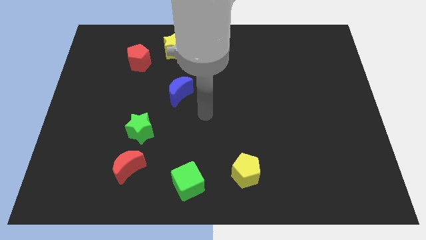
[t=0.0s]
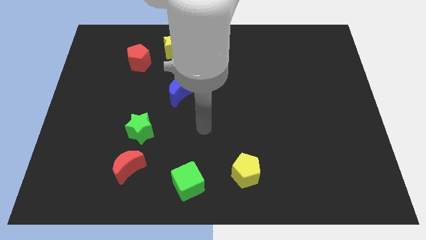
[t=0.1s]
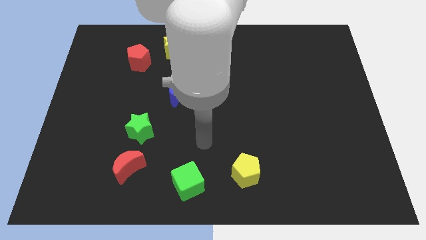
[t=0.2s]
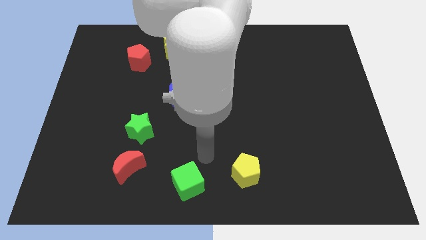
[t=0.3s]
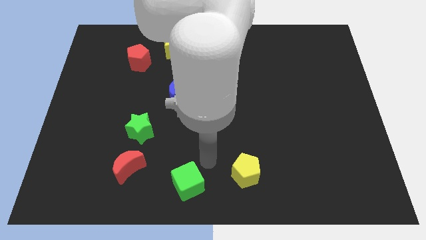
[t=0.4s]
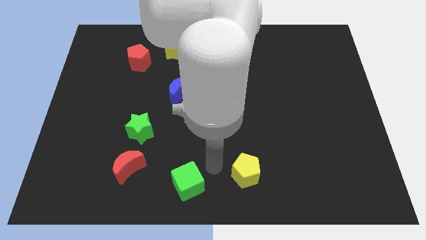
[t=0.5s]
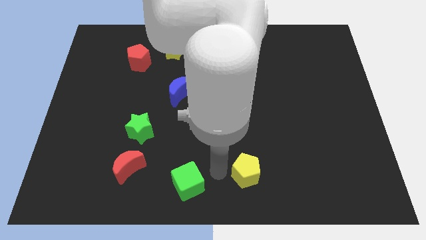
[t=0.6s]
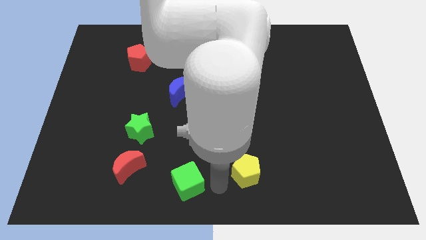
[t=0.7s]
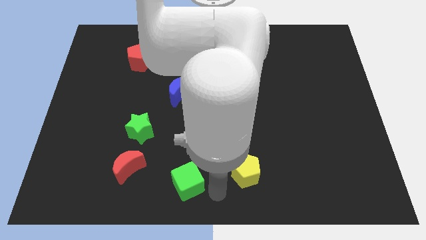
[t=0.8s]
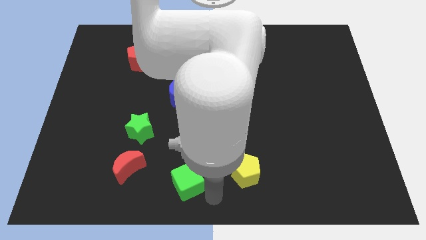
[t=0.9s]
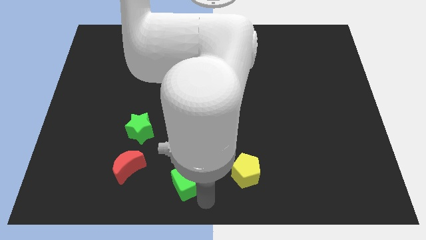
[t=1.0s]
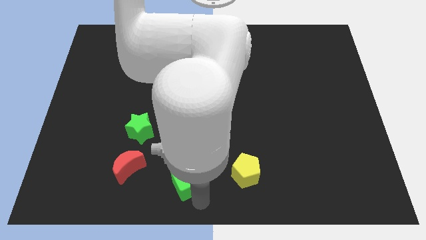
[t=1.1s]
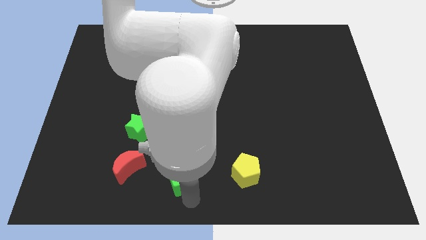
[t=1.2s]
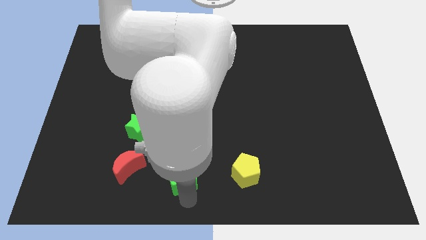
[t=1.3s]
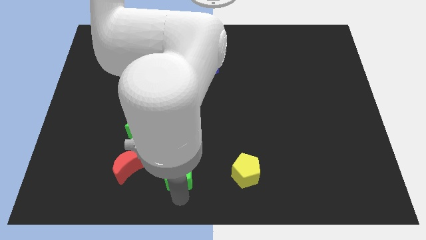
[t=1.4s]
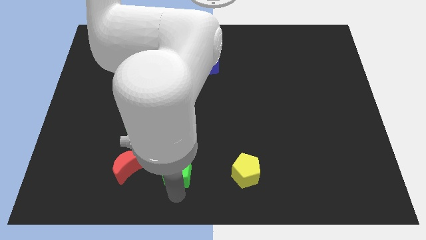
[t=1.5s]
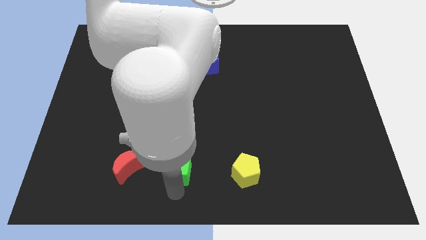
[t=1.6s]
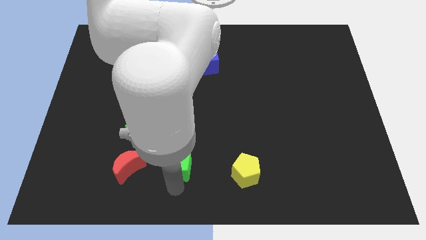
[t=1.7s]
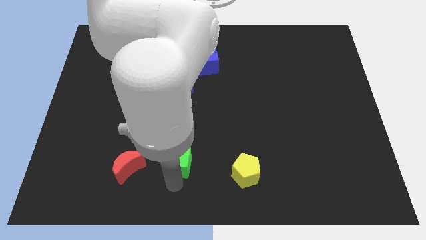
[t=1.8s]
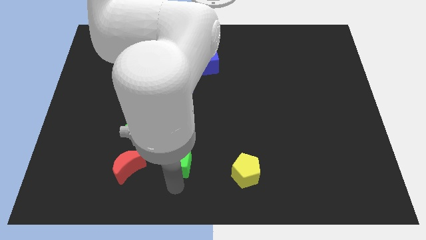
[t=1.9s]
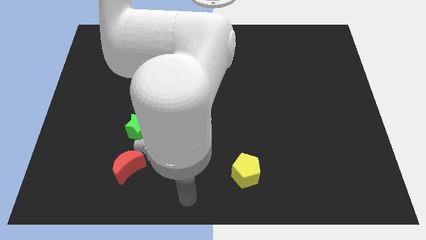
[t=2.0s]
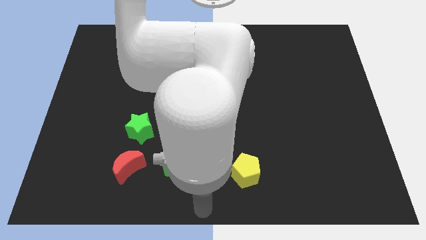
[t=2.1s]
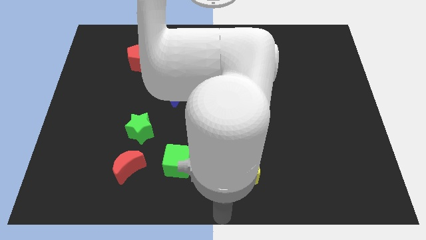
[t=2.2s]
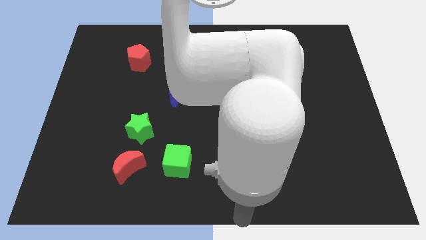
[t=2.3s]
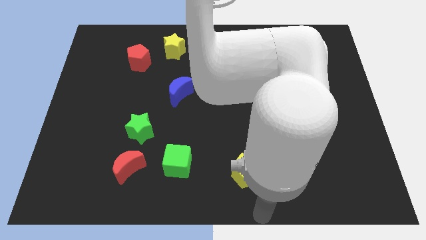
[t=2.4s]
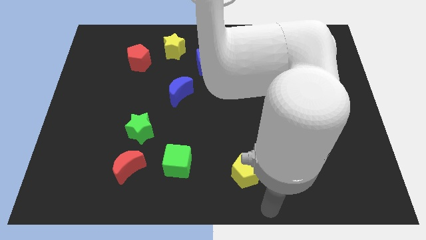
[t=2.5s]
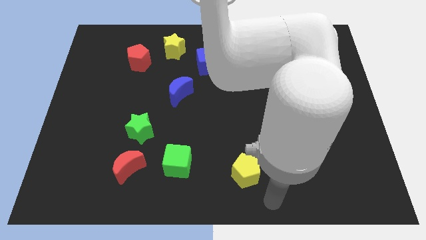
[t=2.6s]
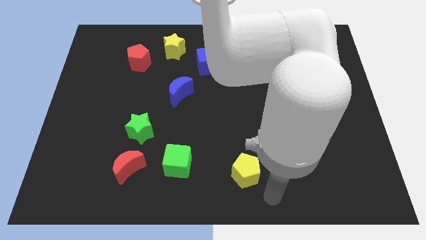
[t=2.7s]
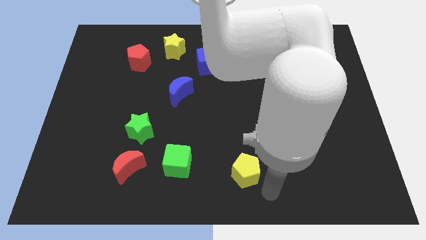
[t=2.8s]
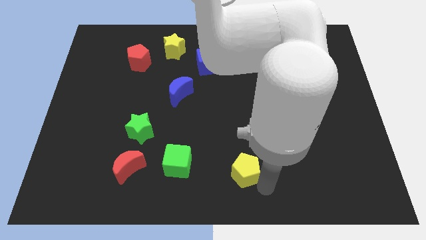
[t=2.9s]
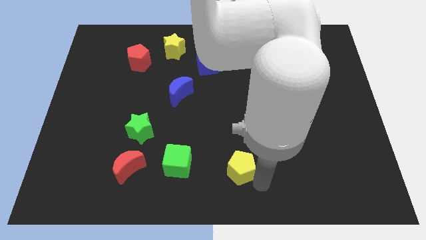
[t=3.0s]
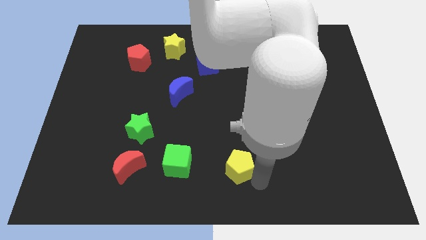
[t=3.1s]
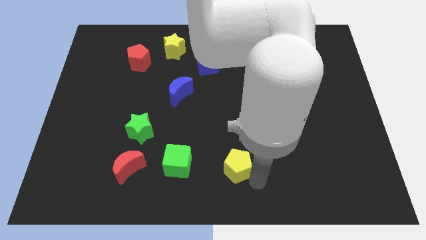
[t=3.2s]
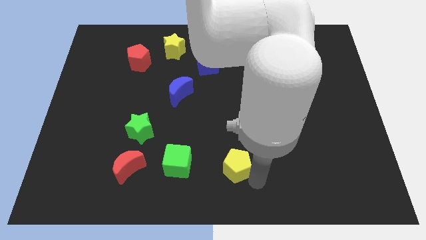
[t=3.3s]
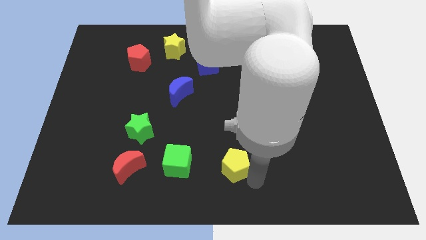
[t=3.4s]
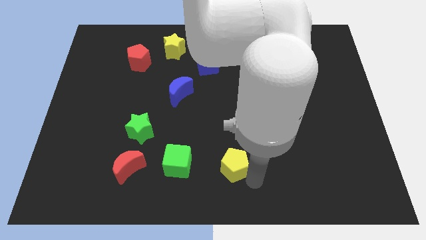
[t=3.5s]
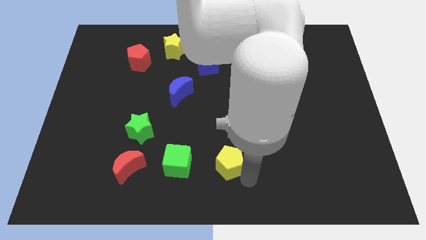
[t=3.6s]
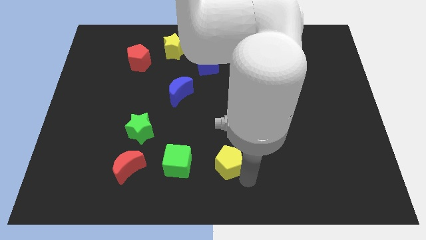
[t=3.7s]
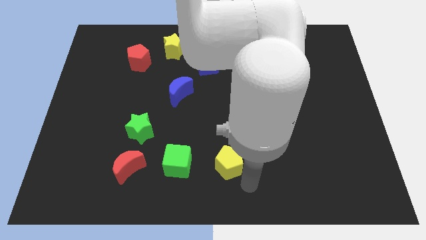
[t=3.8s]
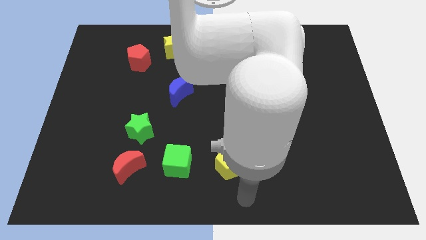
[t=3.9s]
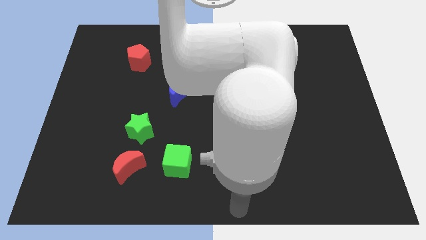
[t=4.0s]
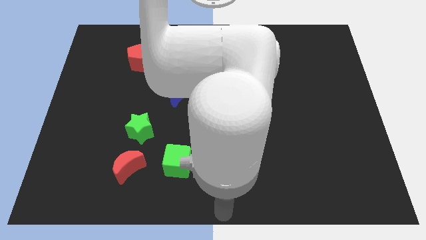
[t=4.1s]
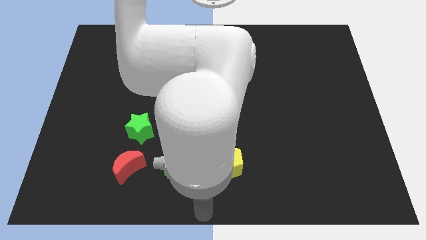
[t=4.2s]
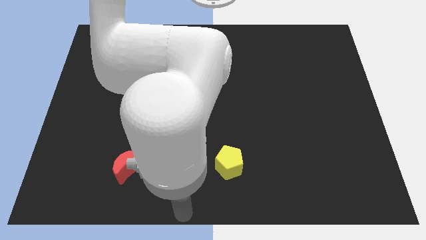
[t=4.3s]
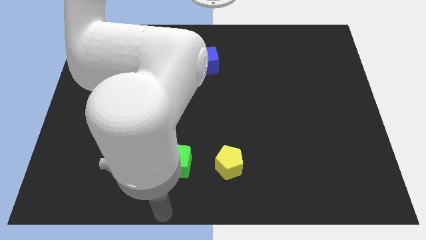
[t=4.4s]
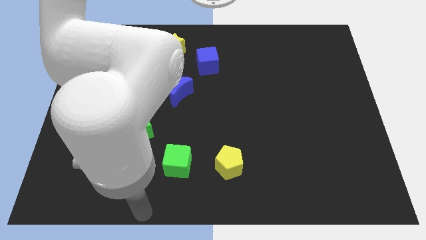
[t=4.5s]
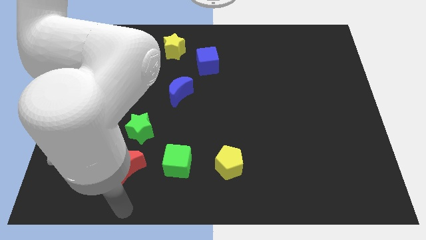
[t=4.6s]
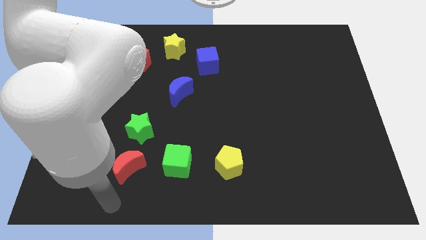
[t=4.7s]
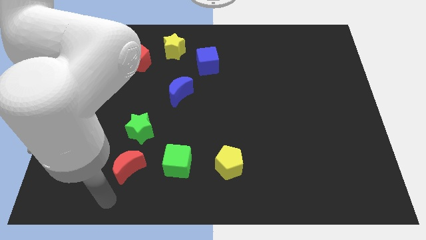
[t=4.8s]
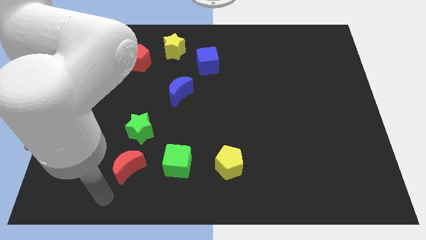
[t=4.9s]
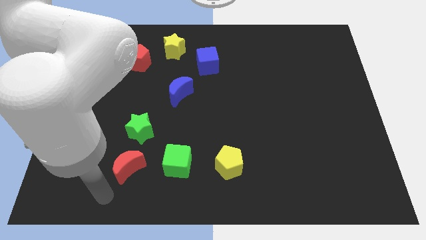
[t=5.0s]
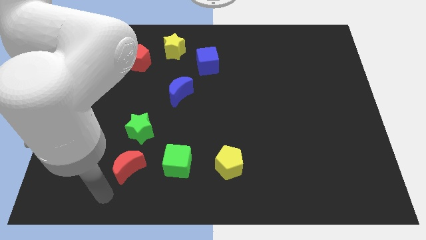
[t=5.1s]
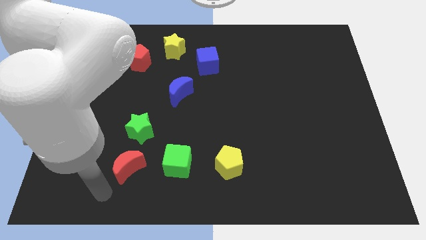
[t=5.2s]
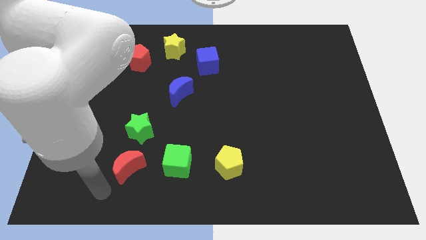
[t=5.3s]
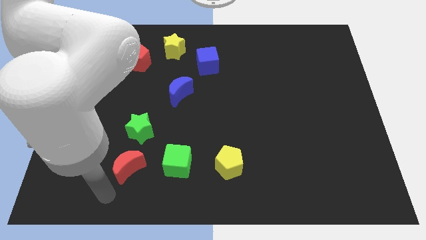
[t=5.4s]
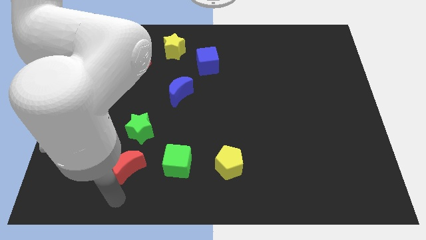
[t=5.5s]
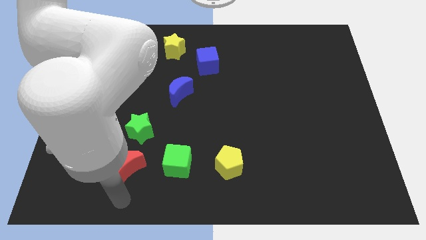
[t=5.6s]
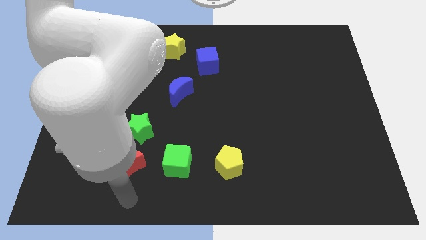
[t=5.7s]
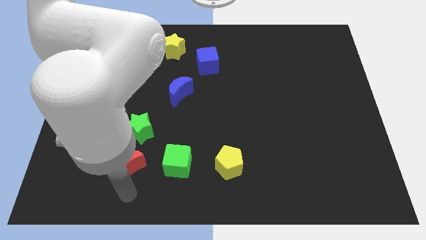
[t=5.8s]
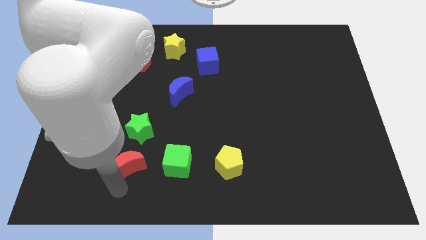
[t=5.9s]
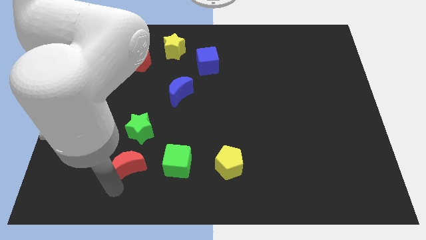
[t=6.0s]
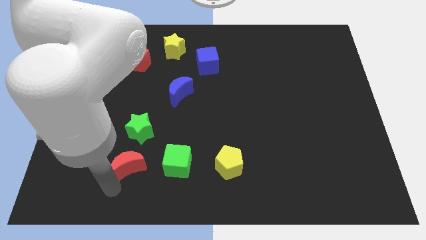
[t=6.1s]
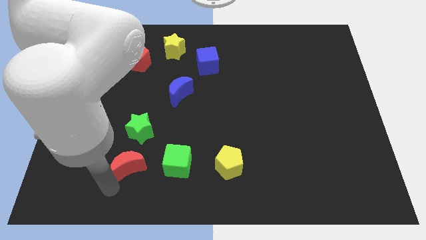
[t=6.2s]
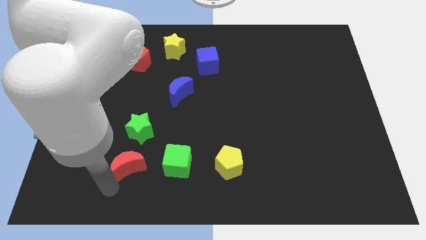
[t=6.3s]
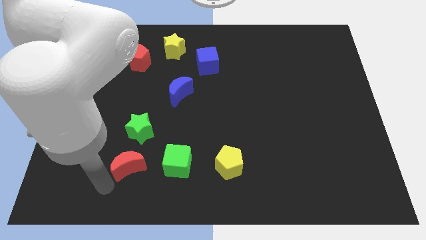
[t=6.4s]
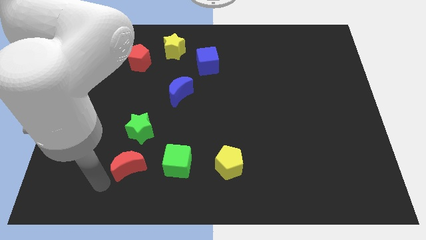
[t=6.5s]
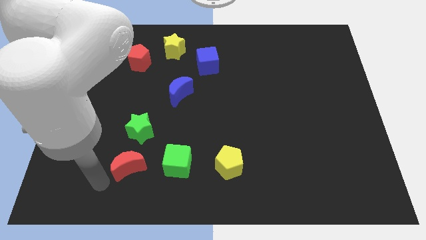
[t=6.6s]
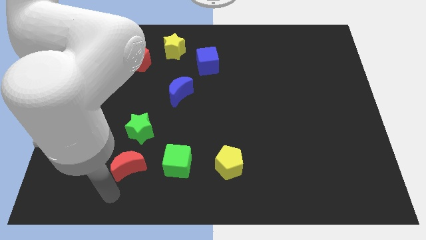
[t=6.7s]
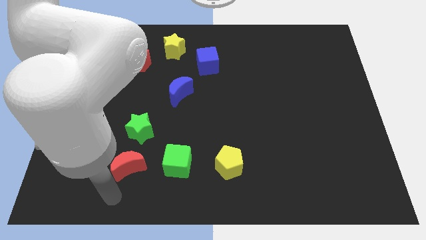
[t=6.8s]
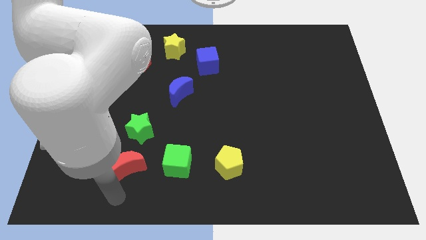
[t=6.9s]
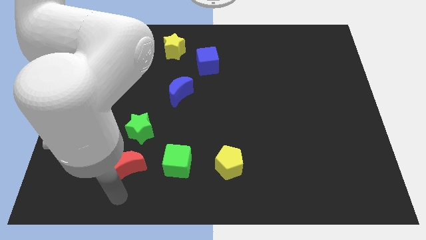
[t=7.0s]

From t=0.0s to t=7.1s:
put the red moon green cube and the yellow pentagon in a line horizontally

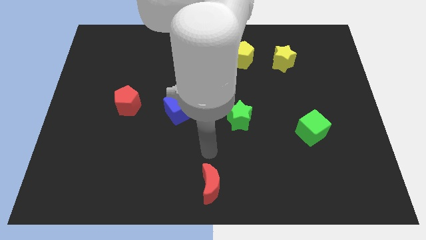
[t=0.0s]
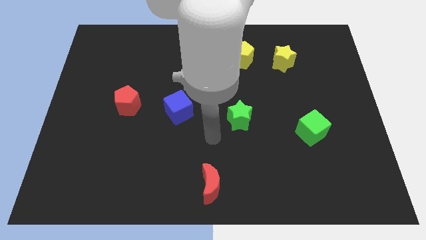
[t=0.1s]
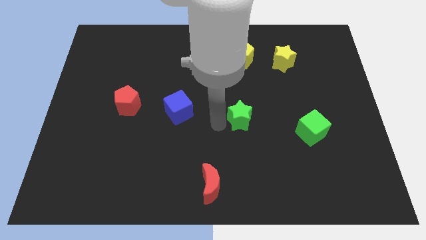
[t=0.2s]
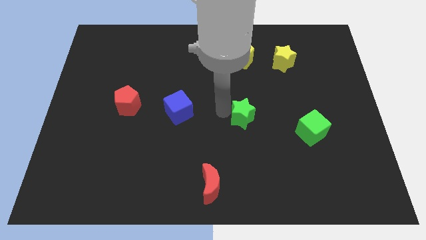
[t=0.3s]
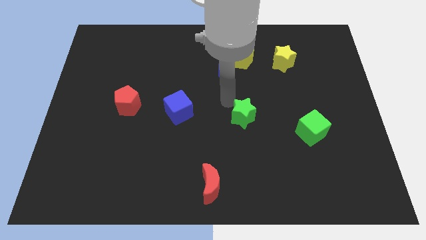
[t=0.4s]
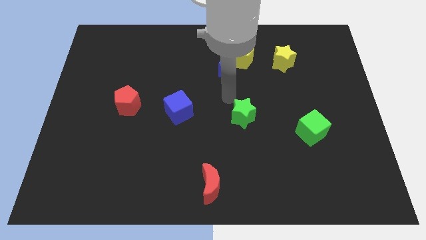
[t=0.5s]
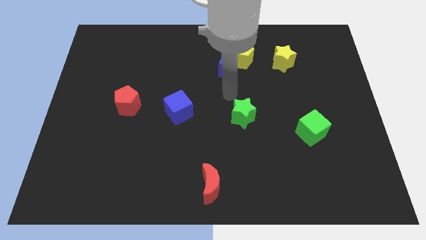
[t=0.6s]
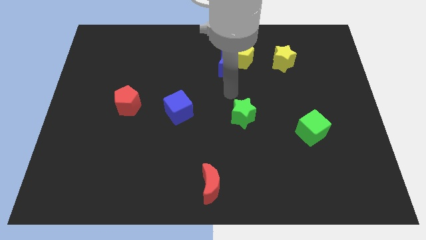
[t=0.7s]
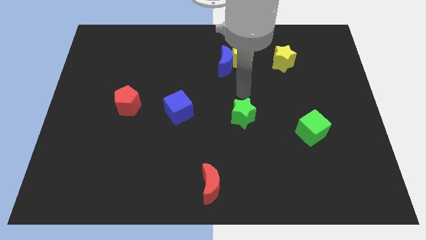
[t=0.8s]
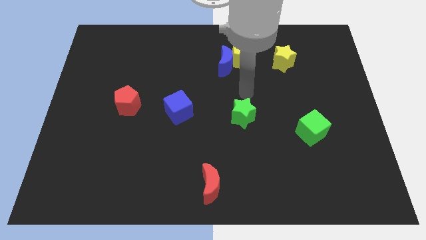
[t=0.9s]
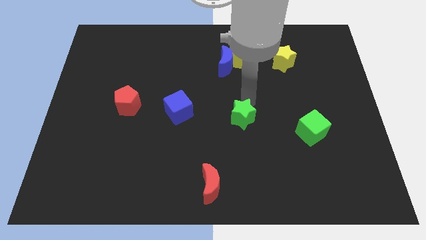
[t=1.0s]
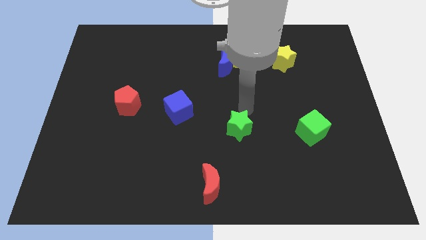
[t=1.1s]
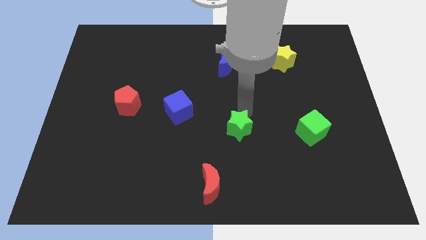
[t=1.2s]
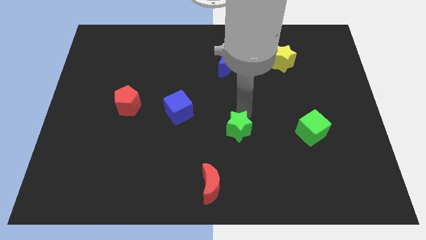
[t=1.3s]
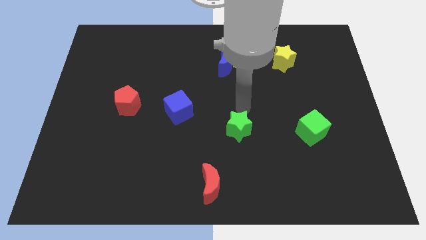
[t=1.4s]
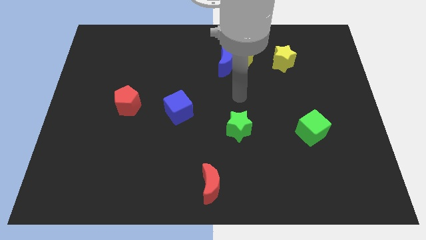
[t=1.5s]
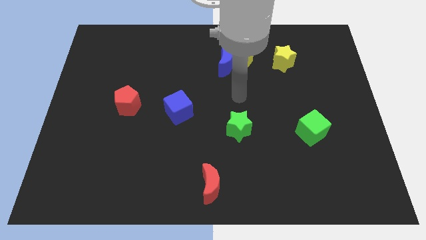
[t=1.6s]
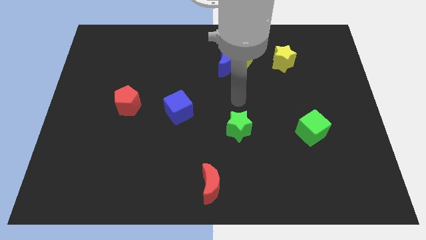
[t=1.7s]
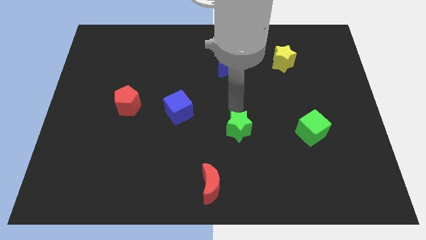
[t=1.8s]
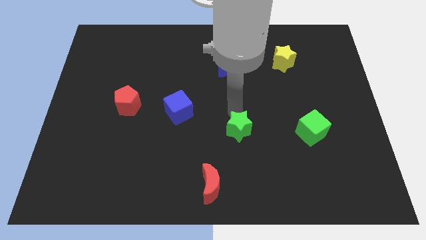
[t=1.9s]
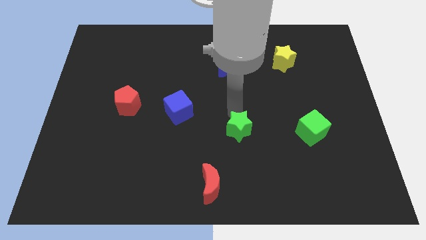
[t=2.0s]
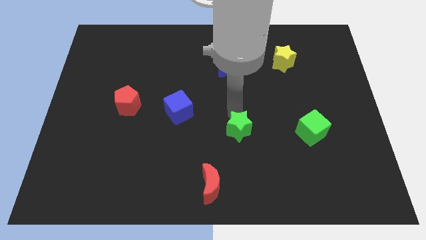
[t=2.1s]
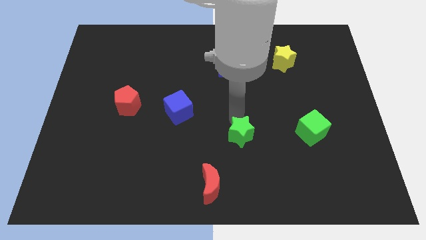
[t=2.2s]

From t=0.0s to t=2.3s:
move the green star slightly to the bottom
